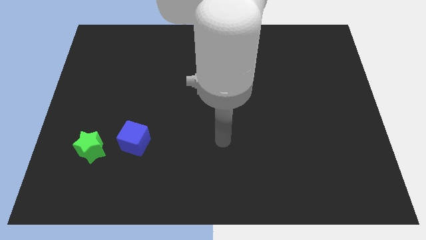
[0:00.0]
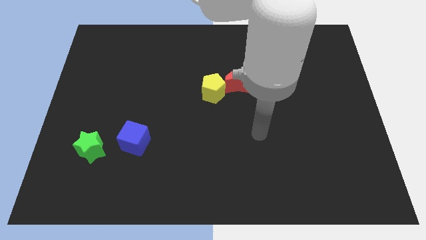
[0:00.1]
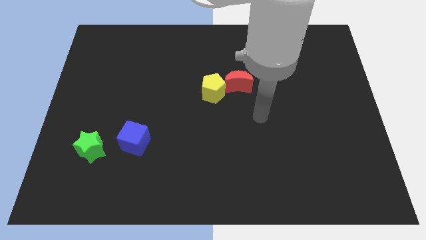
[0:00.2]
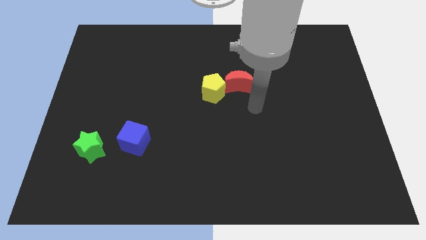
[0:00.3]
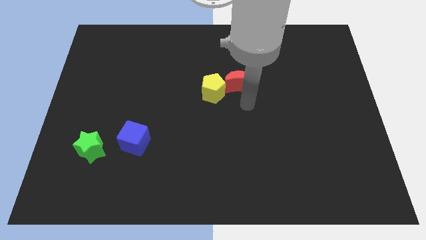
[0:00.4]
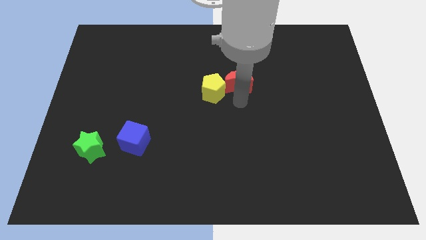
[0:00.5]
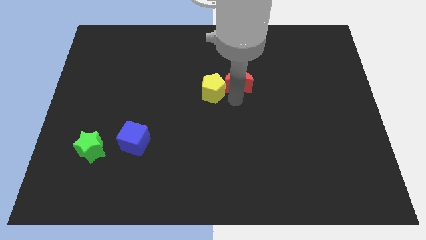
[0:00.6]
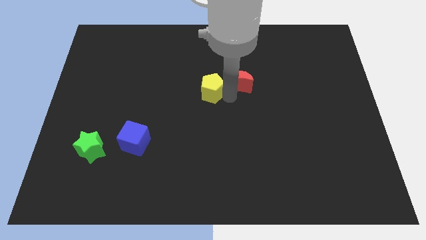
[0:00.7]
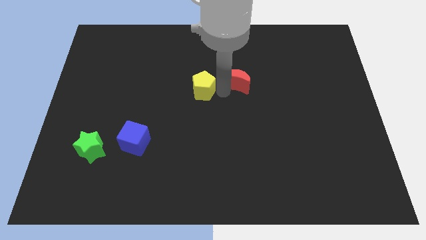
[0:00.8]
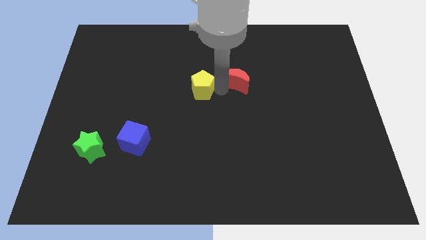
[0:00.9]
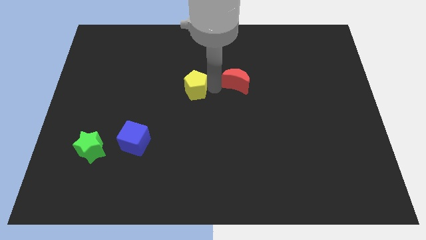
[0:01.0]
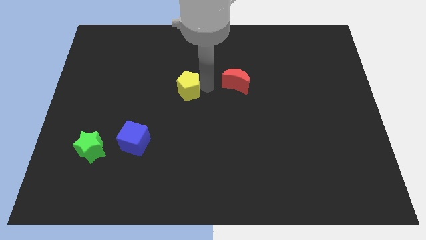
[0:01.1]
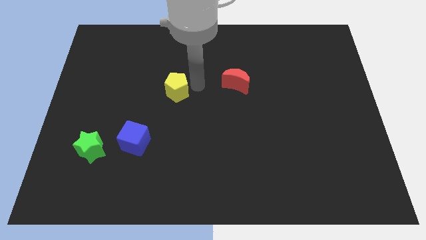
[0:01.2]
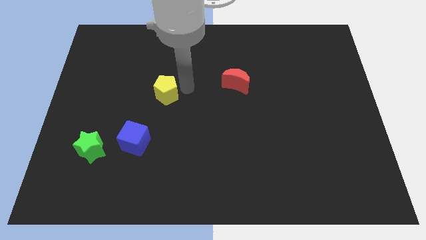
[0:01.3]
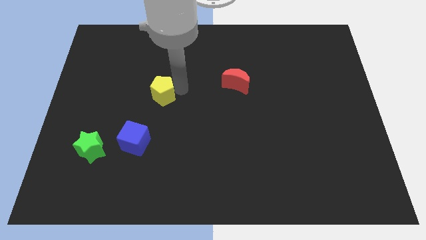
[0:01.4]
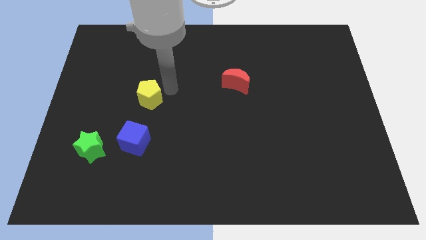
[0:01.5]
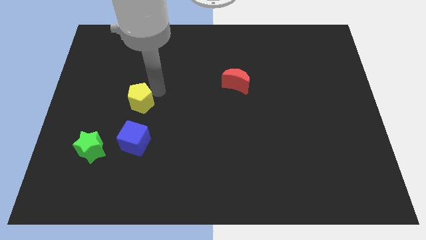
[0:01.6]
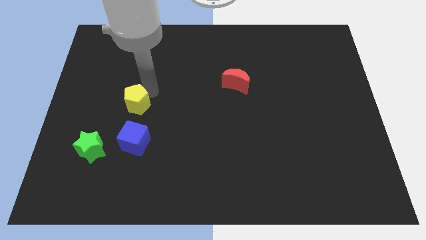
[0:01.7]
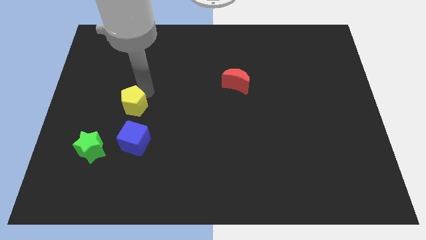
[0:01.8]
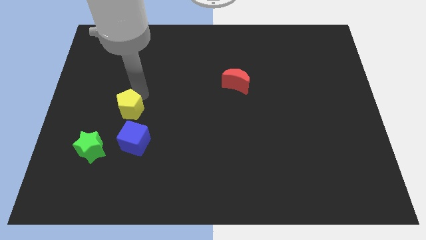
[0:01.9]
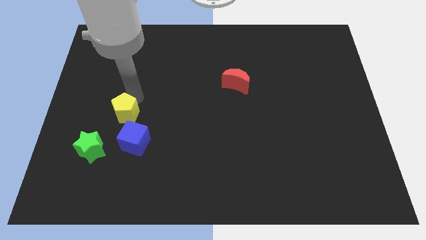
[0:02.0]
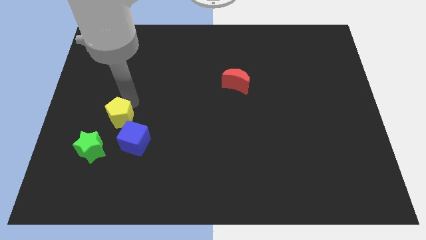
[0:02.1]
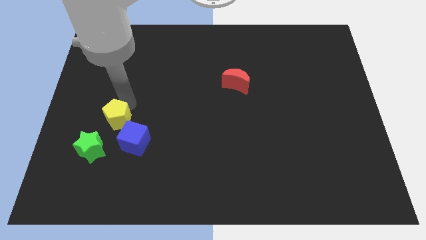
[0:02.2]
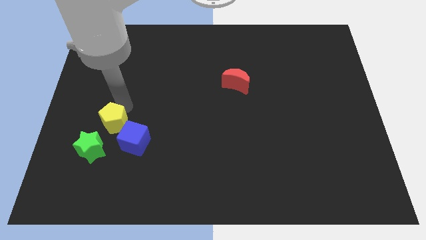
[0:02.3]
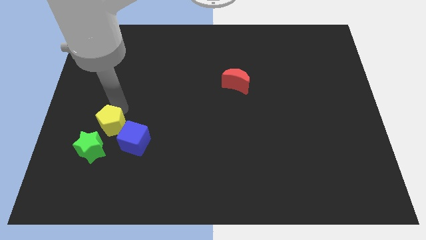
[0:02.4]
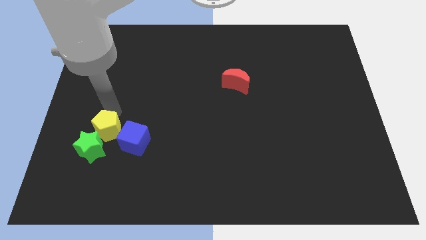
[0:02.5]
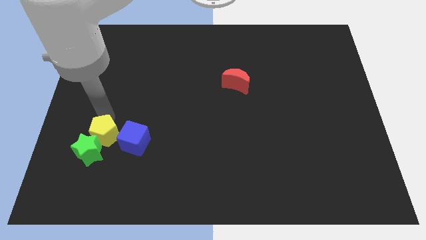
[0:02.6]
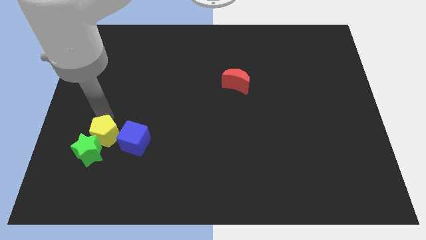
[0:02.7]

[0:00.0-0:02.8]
slide the yellow block towards the star

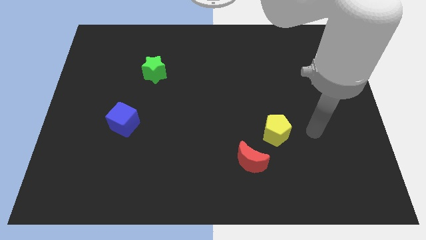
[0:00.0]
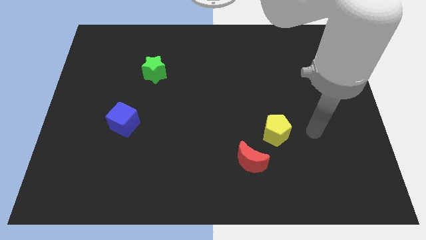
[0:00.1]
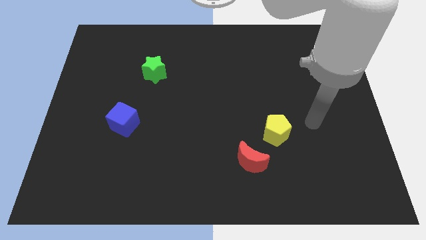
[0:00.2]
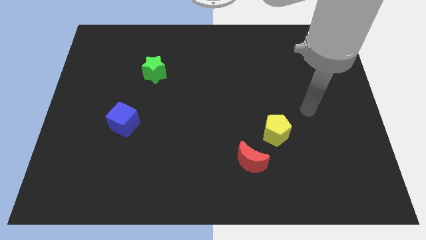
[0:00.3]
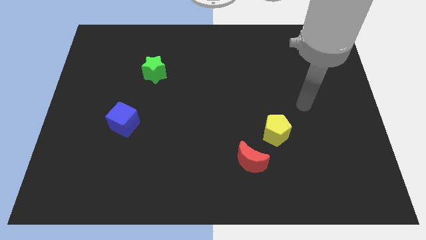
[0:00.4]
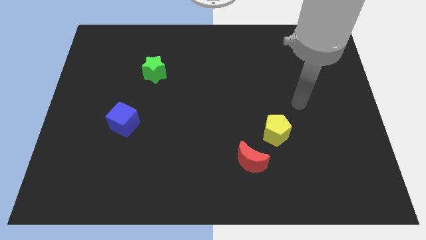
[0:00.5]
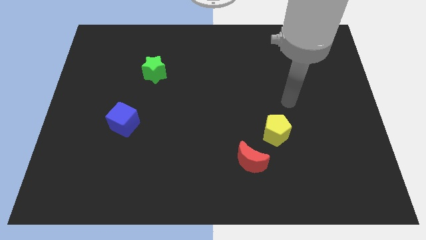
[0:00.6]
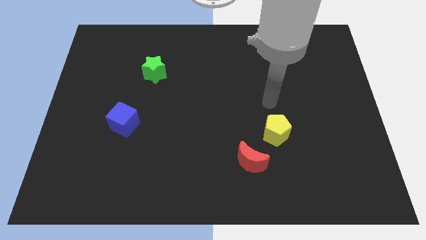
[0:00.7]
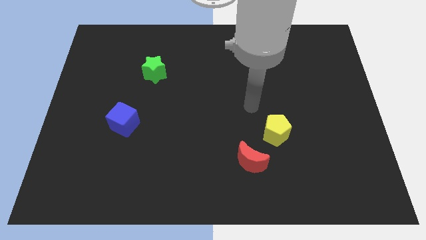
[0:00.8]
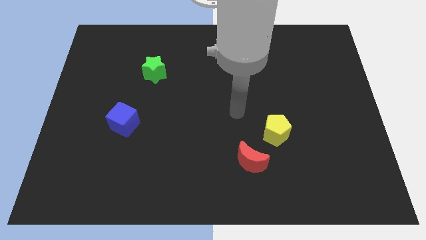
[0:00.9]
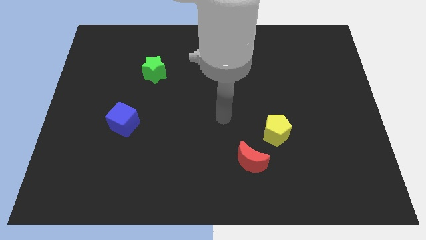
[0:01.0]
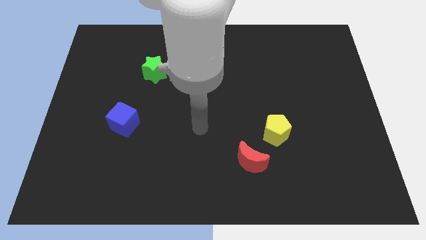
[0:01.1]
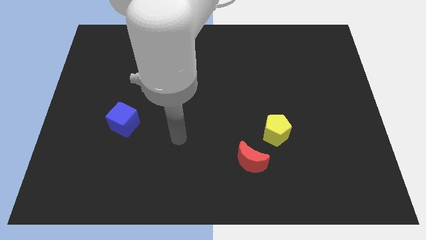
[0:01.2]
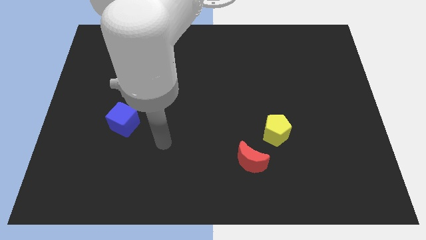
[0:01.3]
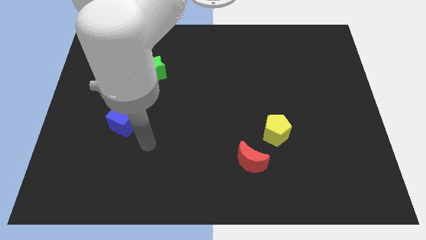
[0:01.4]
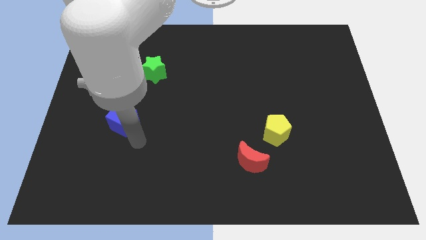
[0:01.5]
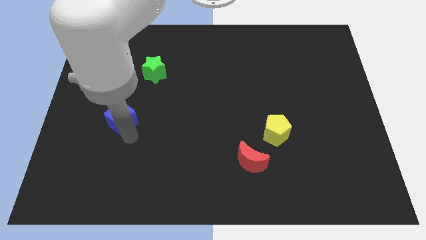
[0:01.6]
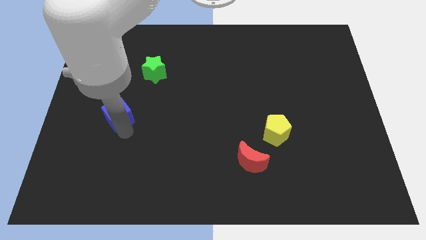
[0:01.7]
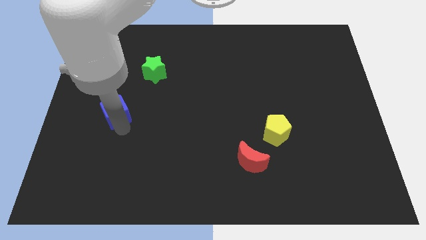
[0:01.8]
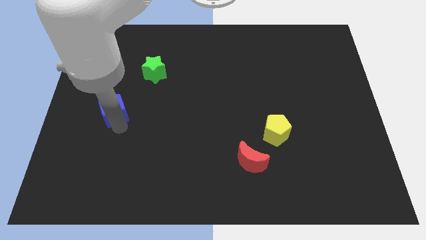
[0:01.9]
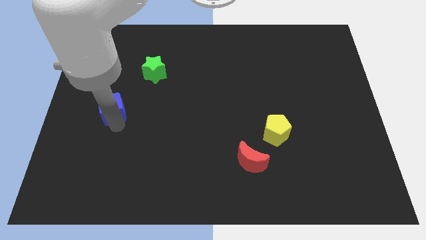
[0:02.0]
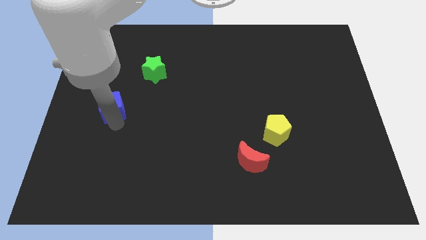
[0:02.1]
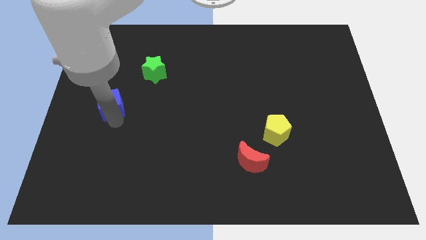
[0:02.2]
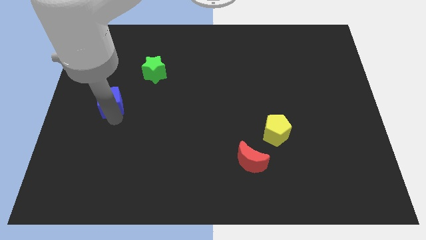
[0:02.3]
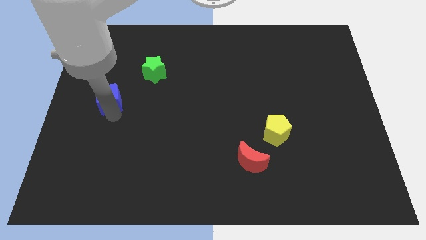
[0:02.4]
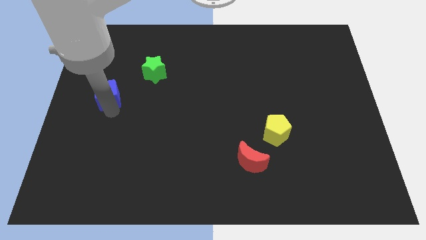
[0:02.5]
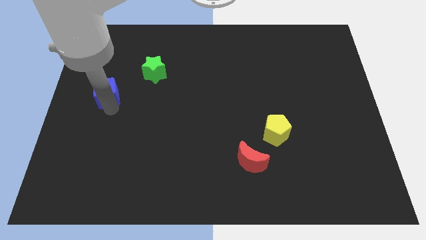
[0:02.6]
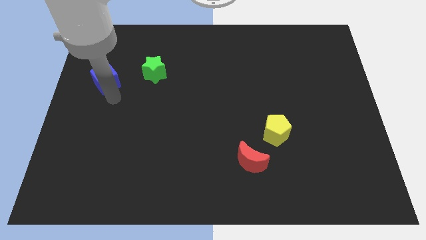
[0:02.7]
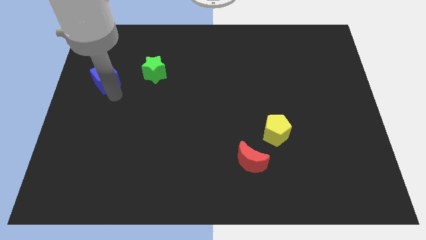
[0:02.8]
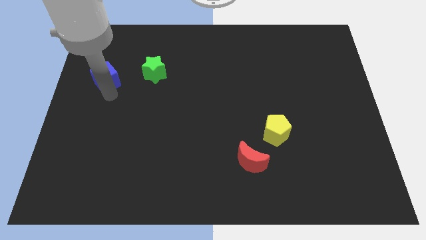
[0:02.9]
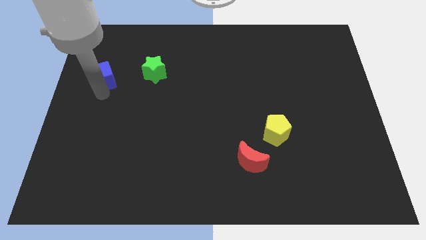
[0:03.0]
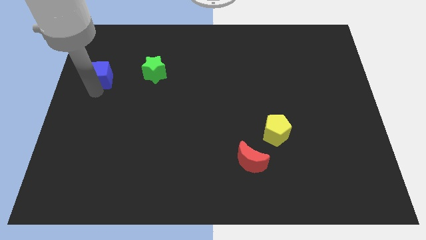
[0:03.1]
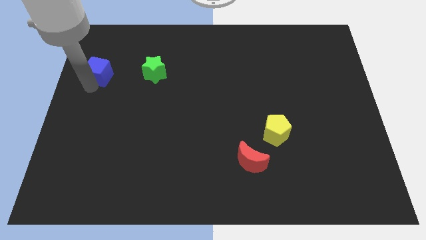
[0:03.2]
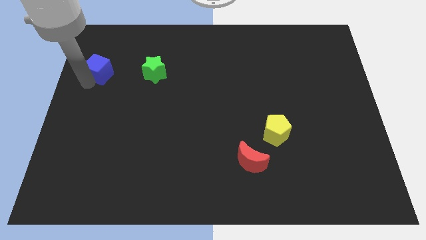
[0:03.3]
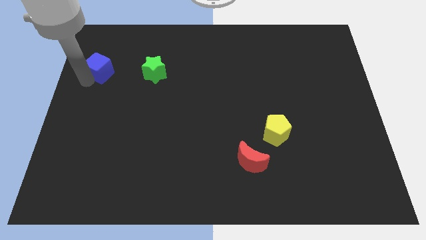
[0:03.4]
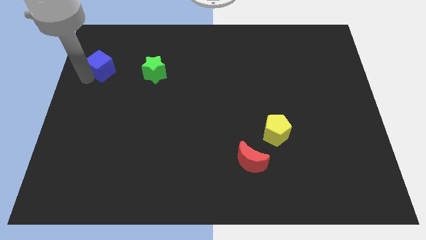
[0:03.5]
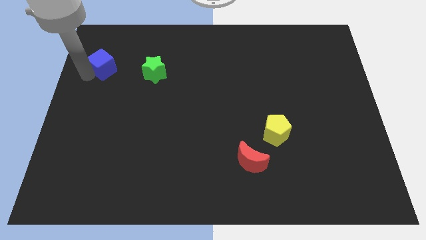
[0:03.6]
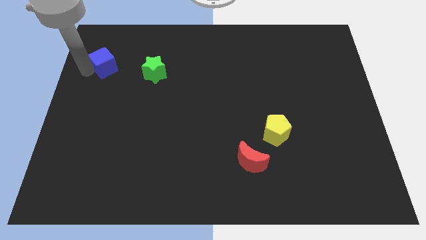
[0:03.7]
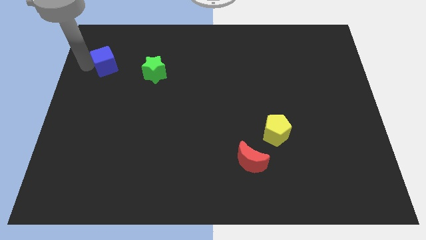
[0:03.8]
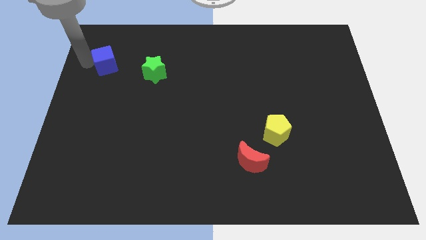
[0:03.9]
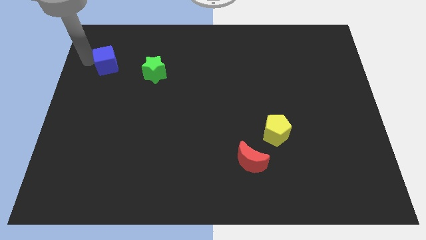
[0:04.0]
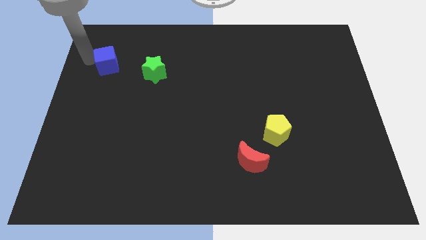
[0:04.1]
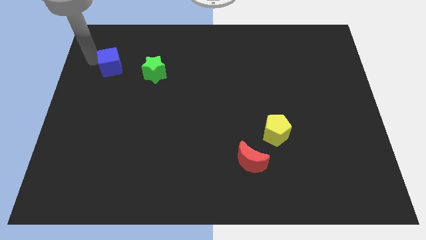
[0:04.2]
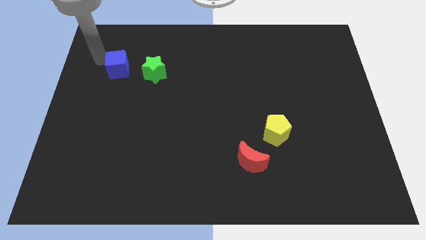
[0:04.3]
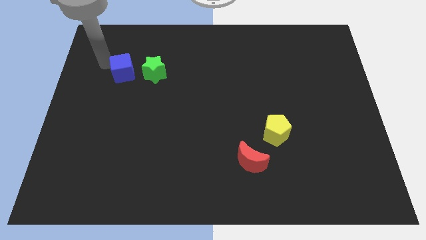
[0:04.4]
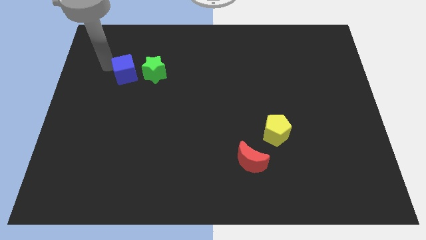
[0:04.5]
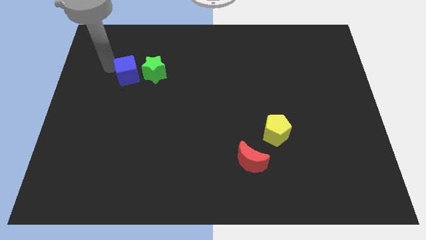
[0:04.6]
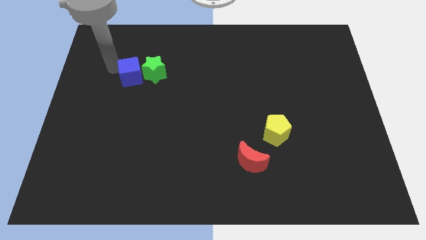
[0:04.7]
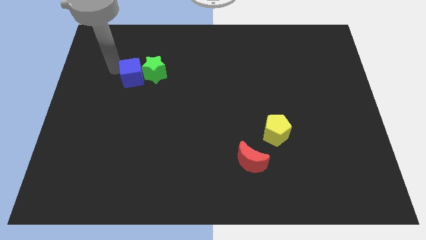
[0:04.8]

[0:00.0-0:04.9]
move the blue cube towards the green block

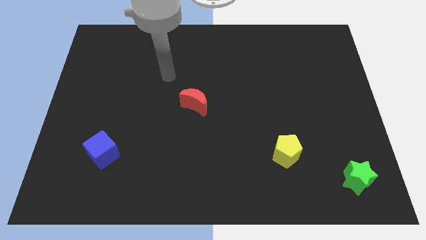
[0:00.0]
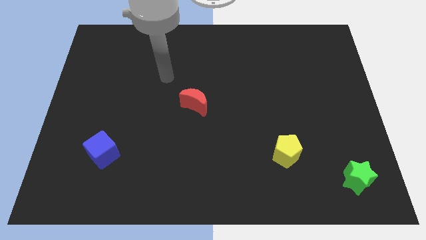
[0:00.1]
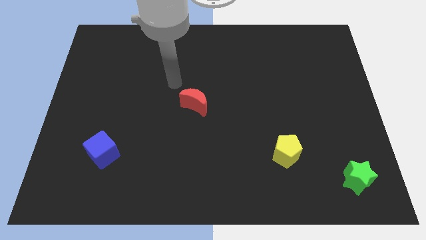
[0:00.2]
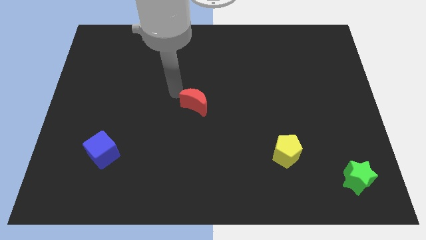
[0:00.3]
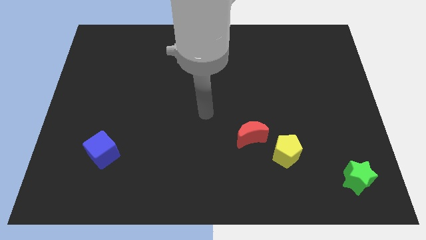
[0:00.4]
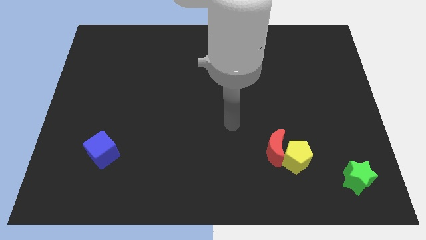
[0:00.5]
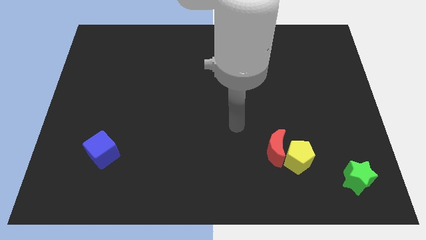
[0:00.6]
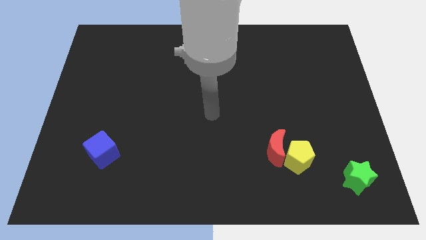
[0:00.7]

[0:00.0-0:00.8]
push the red block towards the yellow pentagon
